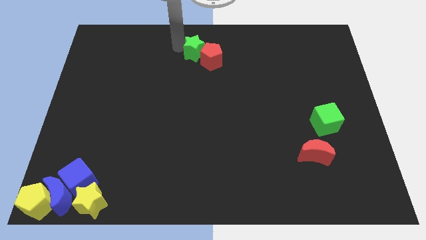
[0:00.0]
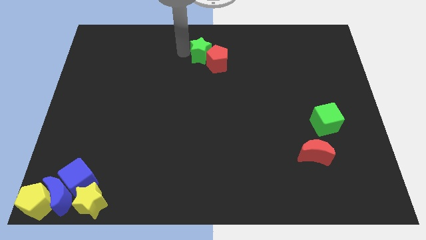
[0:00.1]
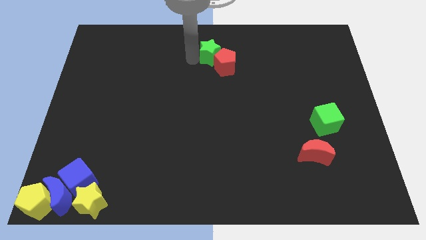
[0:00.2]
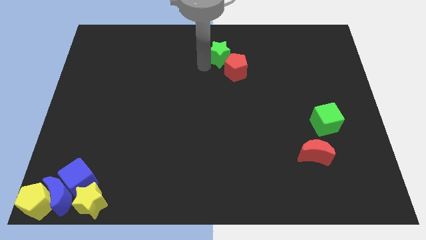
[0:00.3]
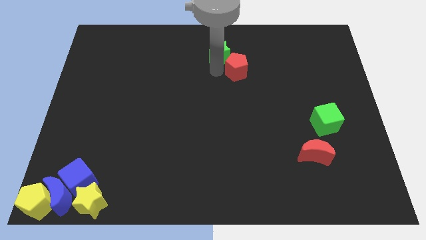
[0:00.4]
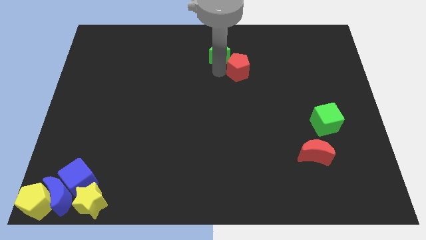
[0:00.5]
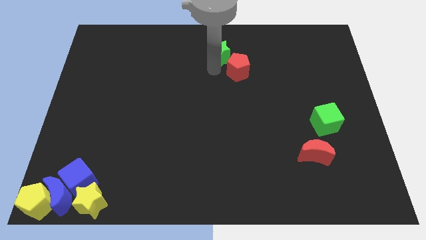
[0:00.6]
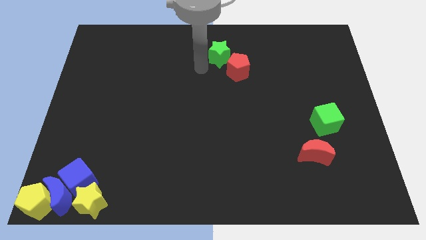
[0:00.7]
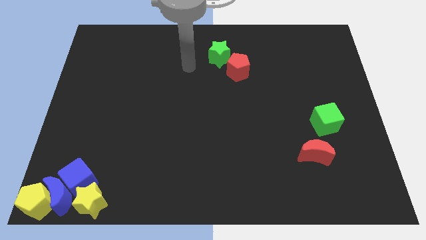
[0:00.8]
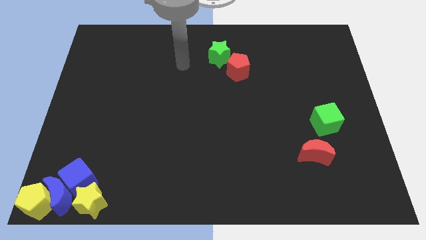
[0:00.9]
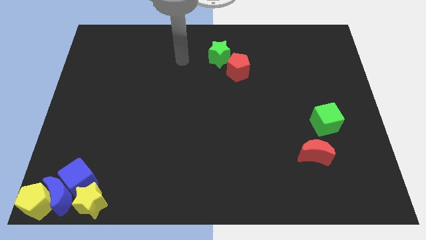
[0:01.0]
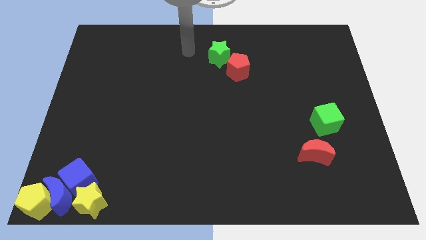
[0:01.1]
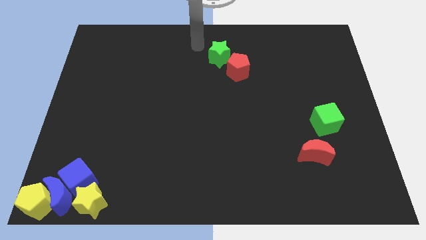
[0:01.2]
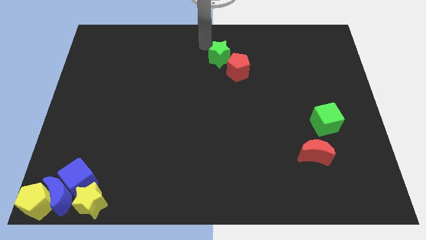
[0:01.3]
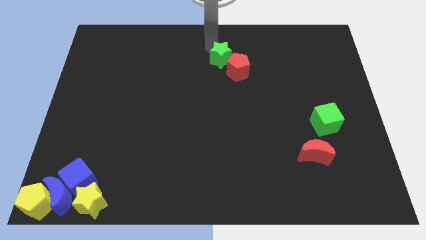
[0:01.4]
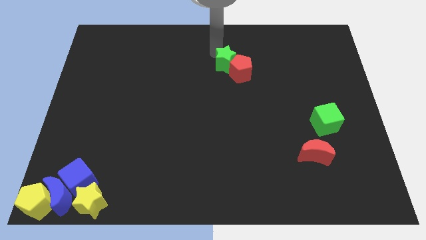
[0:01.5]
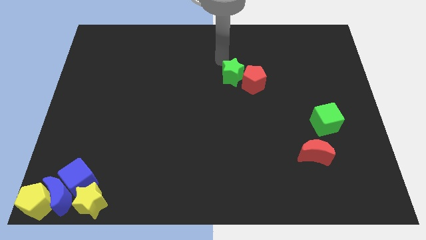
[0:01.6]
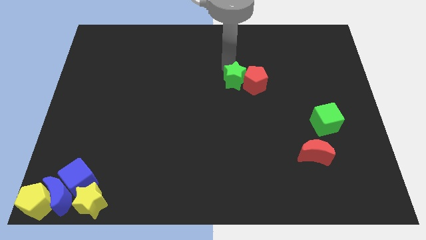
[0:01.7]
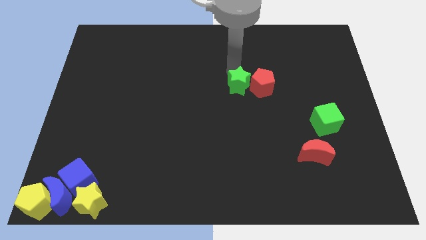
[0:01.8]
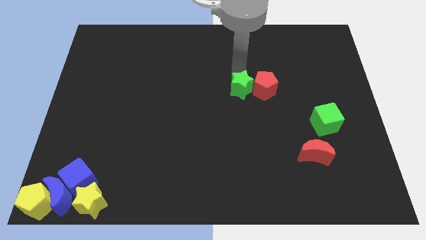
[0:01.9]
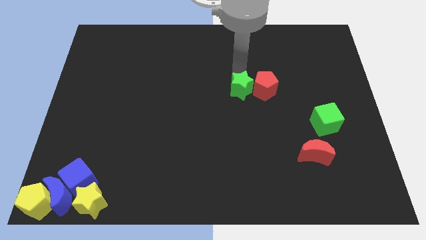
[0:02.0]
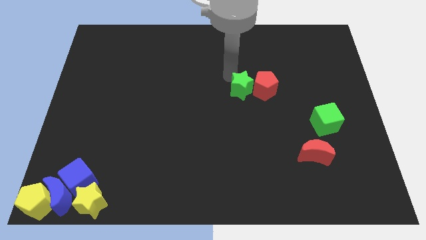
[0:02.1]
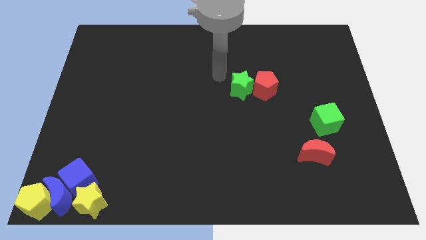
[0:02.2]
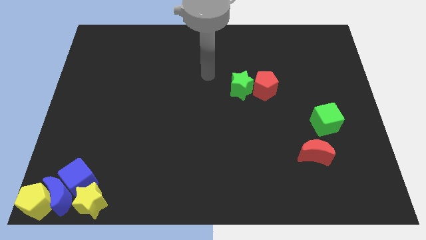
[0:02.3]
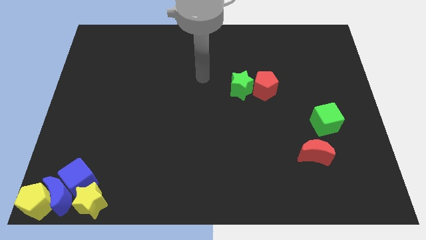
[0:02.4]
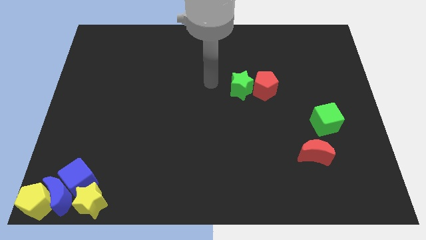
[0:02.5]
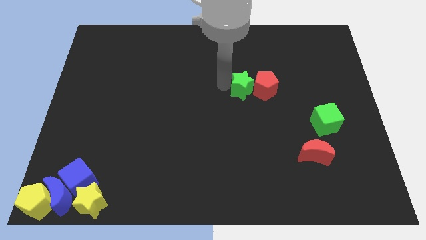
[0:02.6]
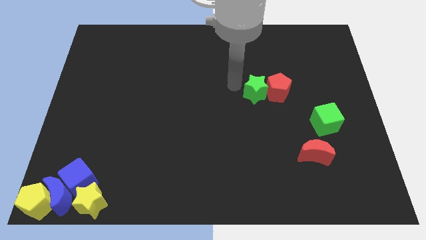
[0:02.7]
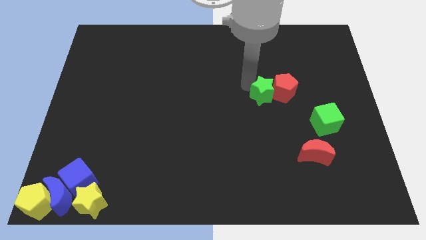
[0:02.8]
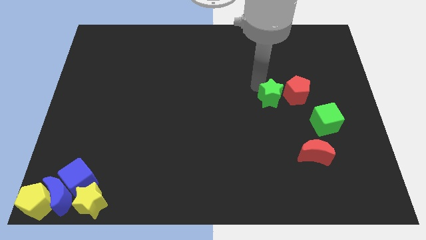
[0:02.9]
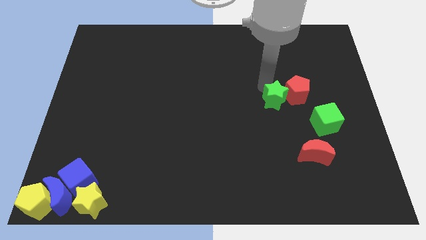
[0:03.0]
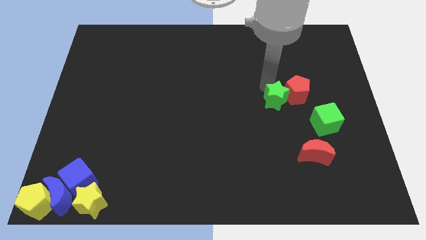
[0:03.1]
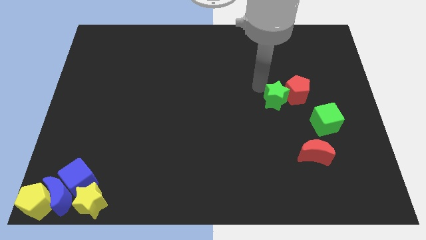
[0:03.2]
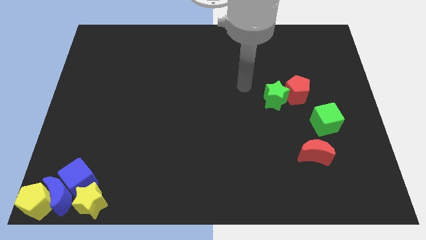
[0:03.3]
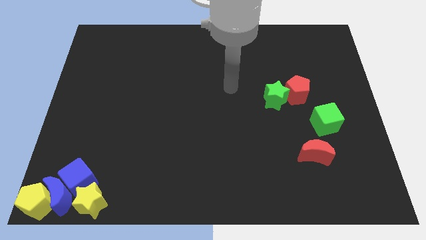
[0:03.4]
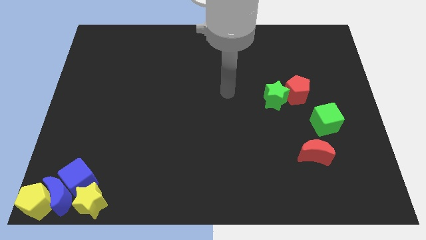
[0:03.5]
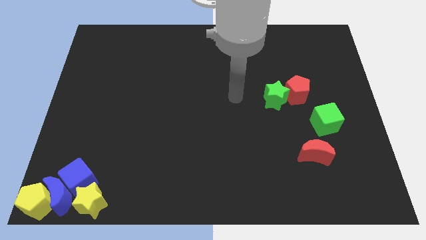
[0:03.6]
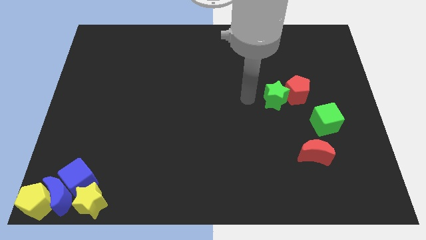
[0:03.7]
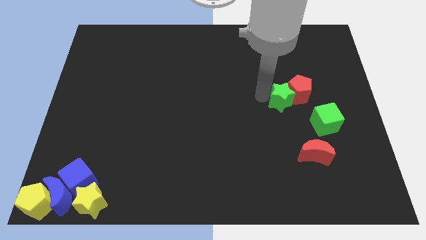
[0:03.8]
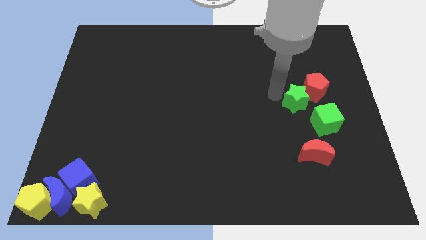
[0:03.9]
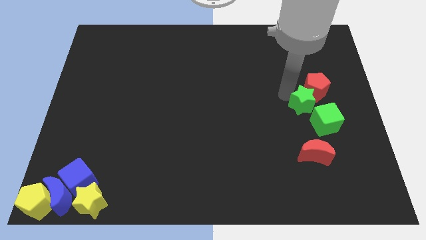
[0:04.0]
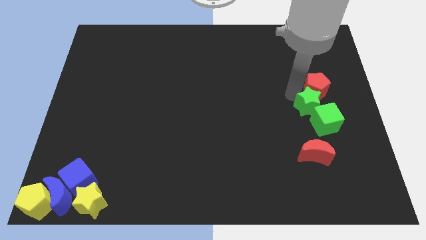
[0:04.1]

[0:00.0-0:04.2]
move the green star and red pentagon towards the upper side of the green cube

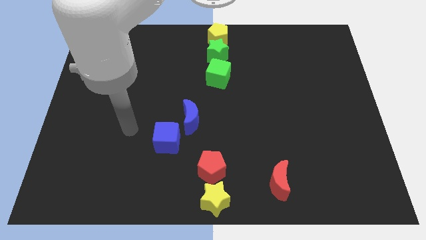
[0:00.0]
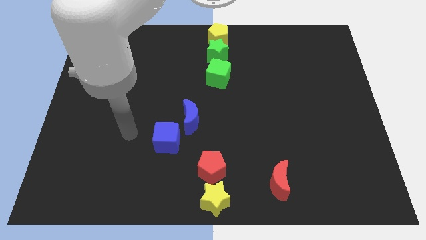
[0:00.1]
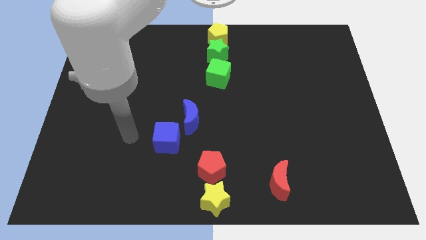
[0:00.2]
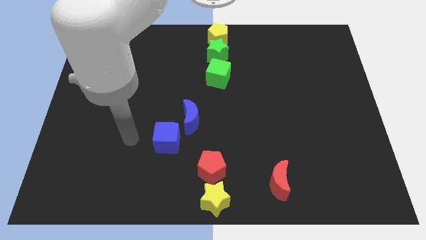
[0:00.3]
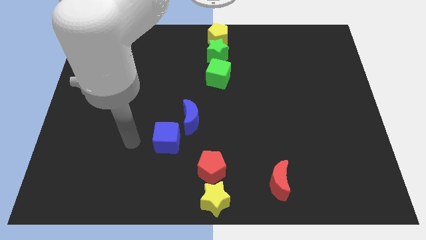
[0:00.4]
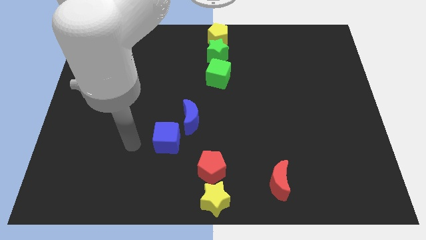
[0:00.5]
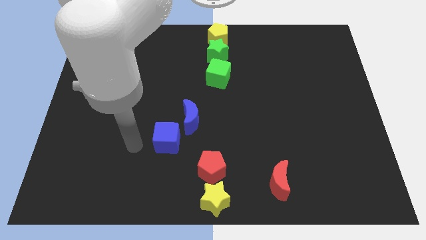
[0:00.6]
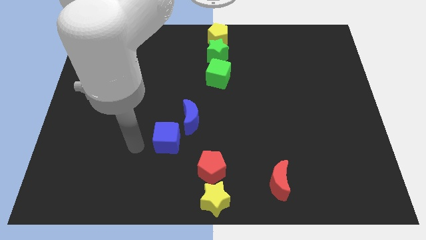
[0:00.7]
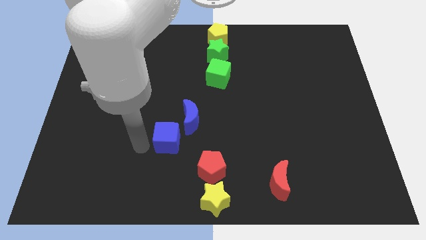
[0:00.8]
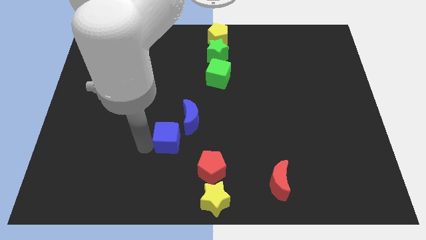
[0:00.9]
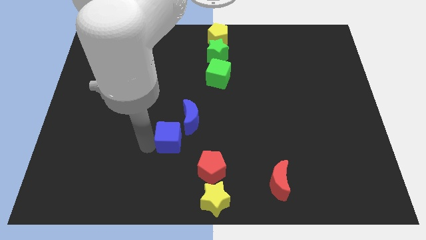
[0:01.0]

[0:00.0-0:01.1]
place the arm left to the blue cube

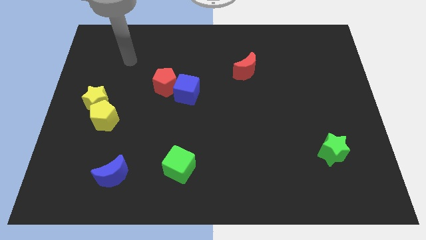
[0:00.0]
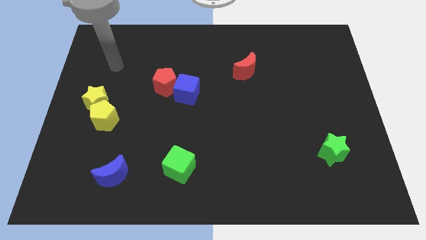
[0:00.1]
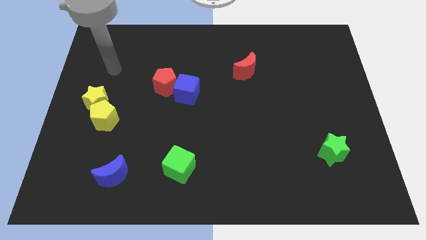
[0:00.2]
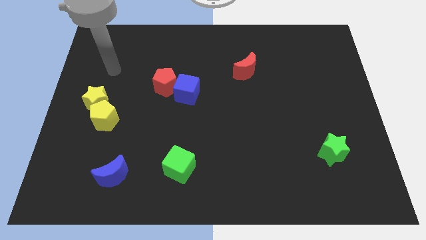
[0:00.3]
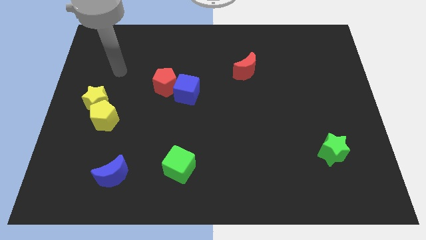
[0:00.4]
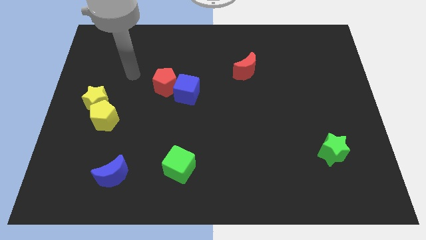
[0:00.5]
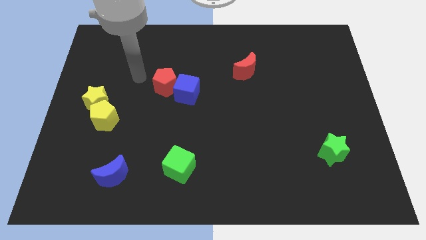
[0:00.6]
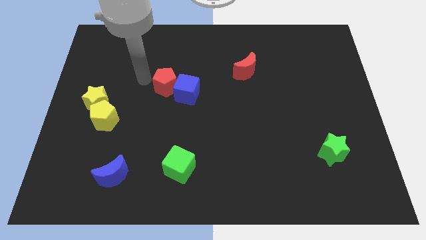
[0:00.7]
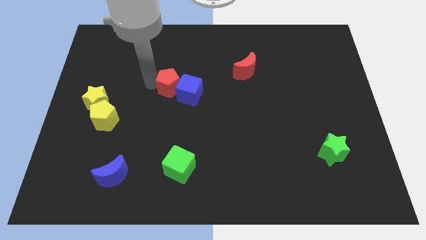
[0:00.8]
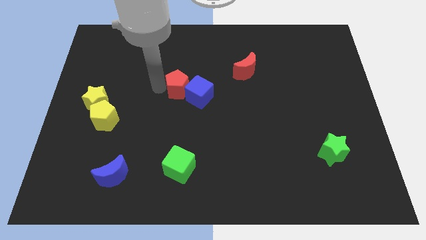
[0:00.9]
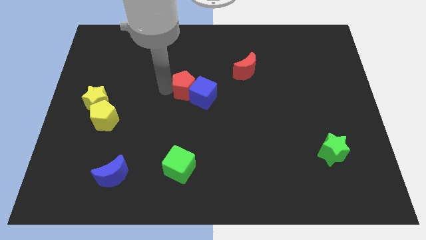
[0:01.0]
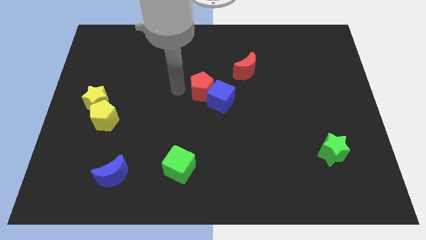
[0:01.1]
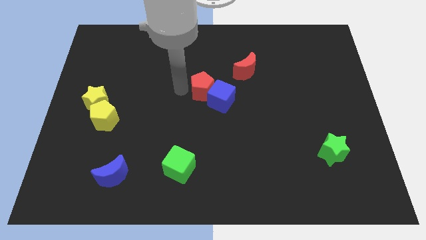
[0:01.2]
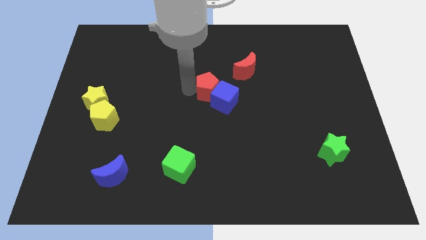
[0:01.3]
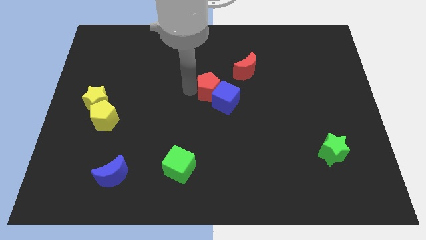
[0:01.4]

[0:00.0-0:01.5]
move the red pentagon along with the blue cube to the center of the board

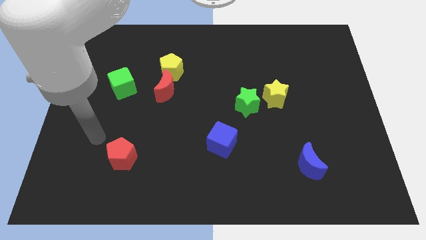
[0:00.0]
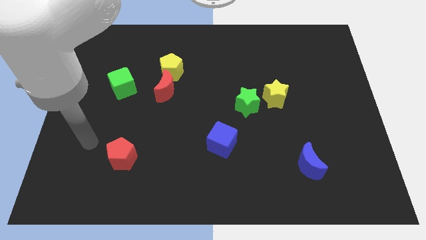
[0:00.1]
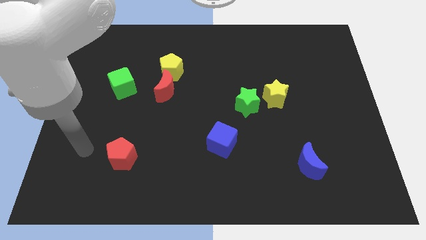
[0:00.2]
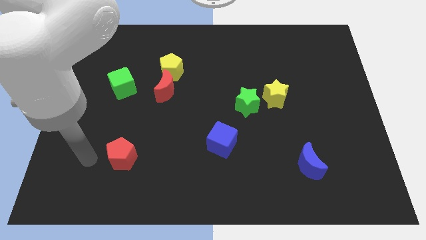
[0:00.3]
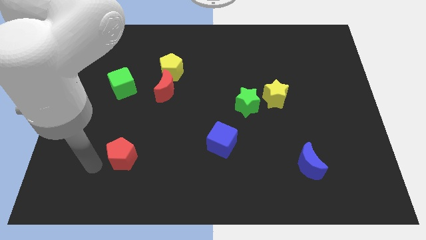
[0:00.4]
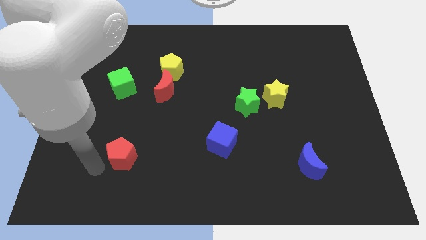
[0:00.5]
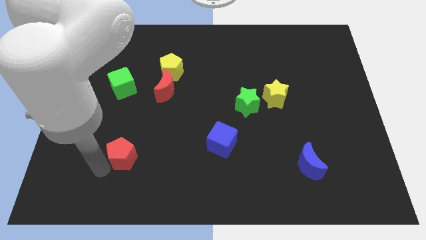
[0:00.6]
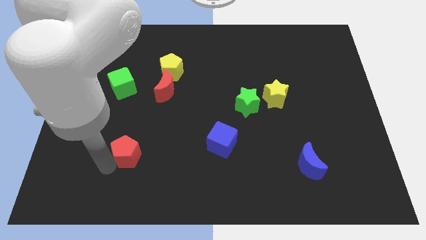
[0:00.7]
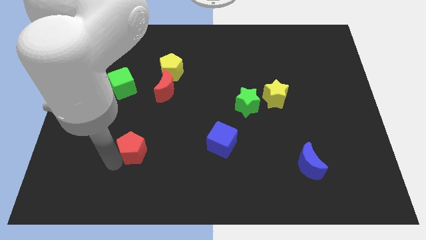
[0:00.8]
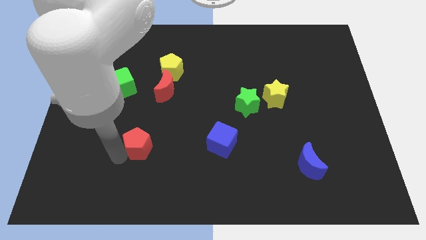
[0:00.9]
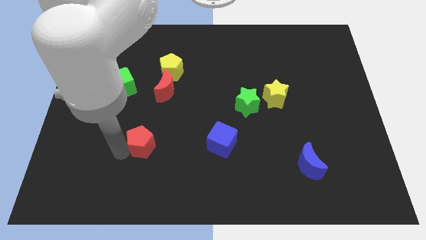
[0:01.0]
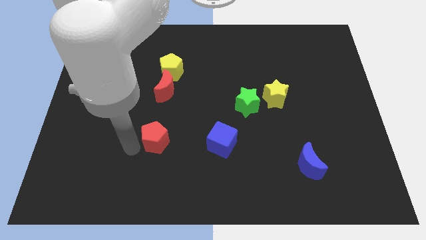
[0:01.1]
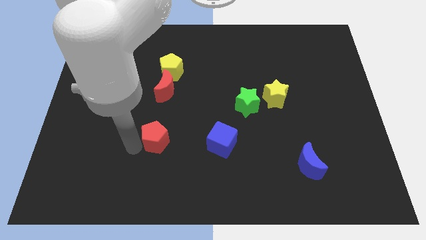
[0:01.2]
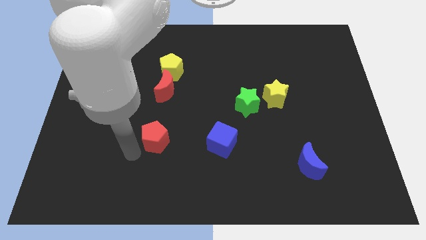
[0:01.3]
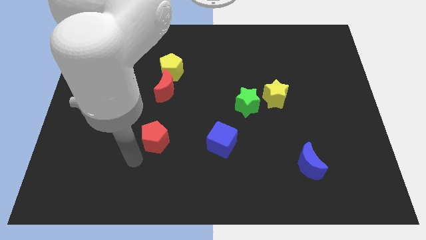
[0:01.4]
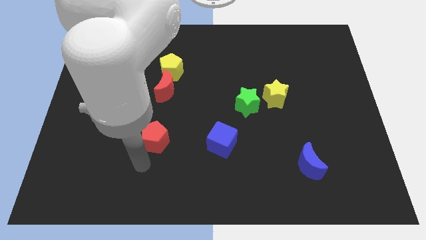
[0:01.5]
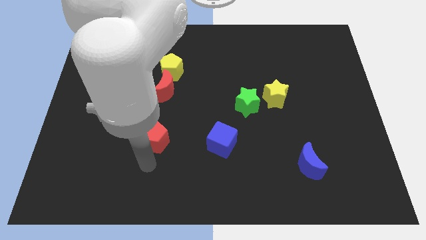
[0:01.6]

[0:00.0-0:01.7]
place the red pentagon vertically to the bottom of the red crescent

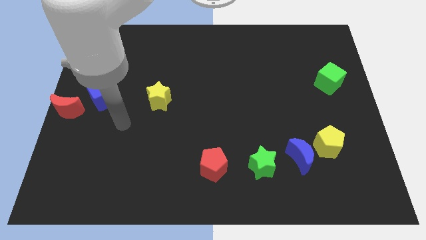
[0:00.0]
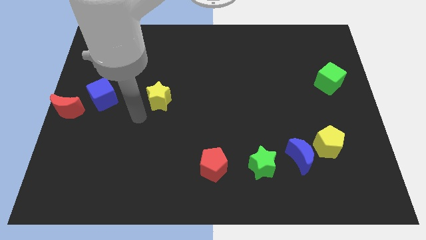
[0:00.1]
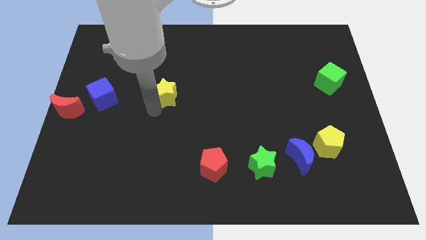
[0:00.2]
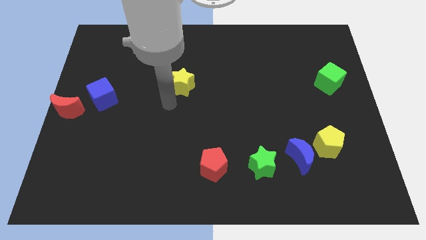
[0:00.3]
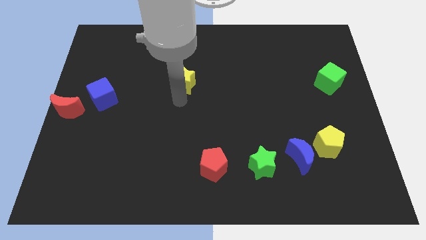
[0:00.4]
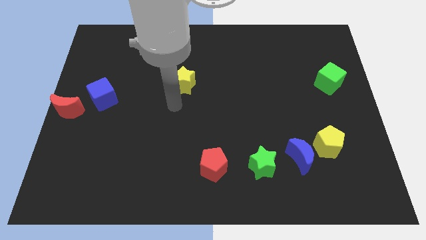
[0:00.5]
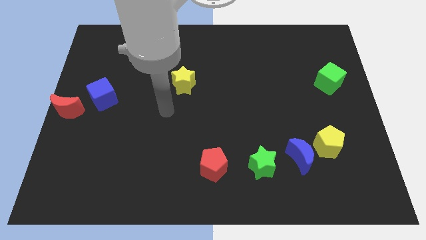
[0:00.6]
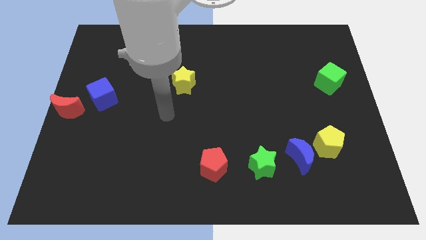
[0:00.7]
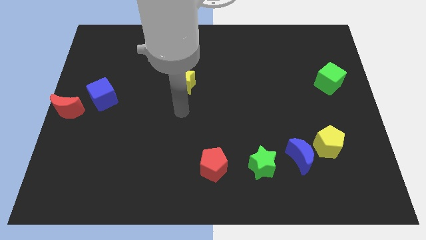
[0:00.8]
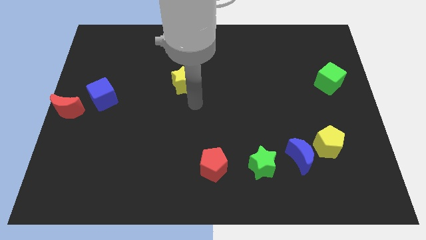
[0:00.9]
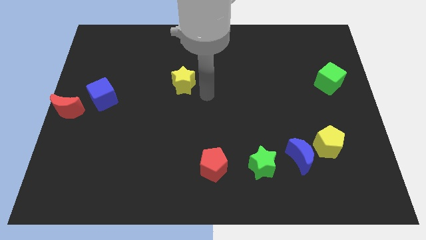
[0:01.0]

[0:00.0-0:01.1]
push yellow star towards right slightly
